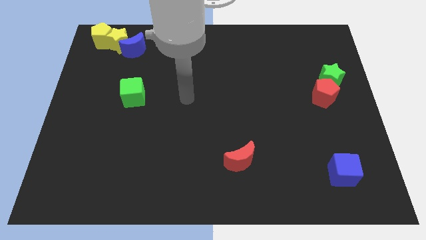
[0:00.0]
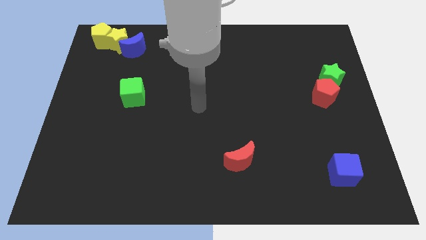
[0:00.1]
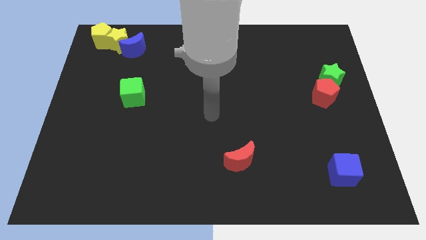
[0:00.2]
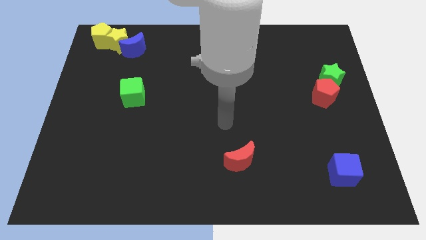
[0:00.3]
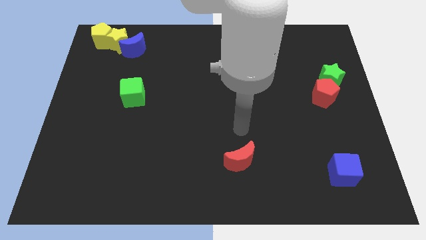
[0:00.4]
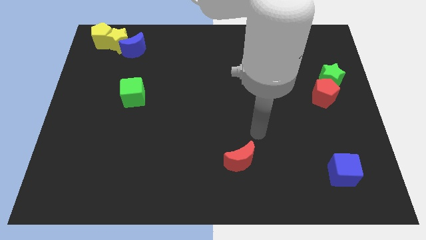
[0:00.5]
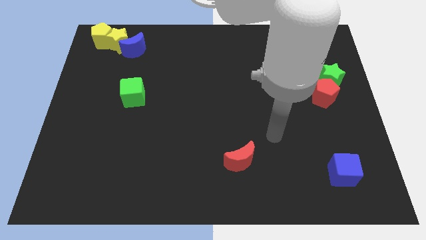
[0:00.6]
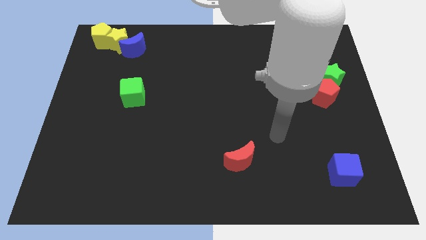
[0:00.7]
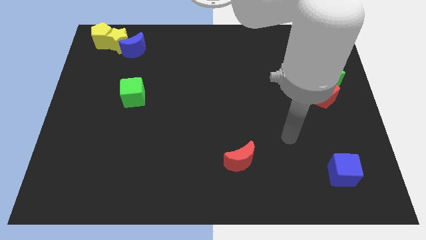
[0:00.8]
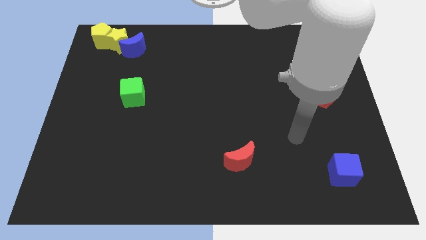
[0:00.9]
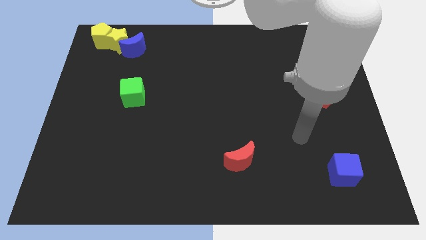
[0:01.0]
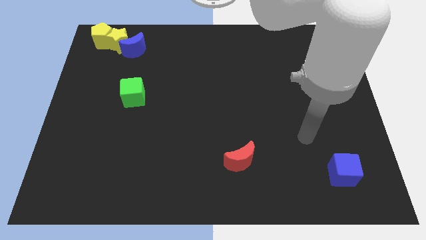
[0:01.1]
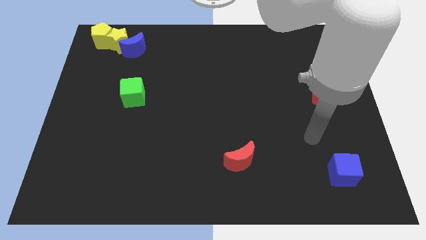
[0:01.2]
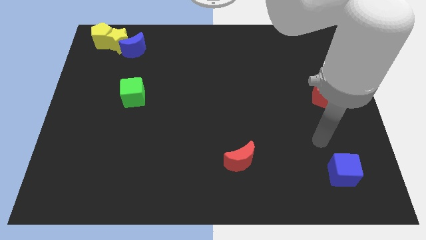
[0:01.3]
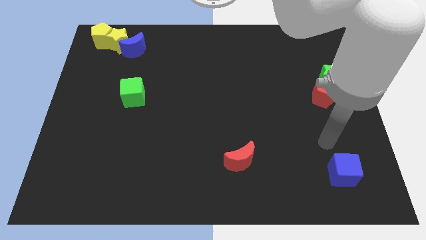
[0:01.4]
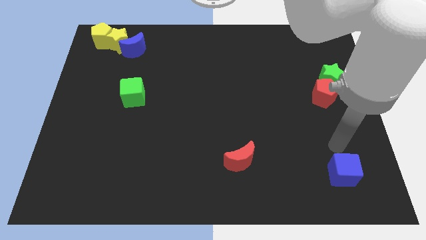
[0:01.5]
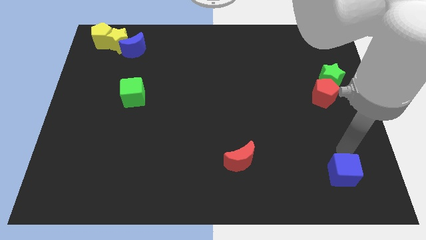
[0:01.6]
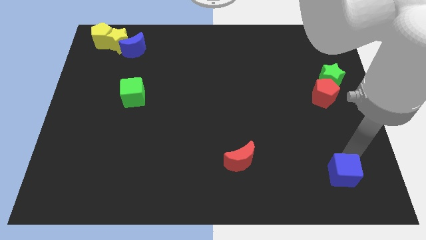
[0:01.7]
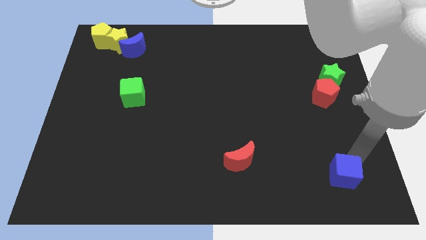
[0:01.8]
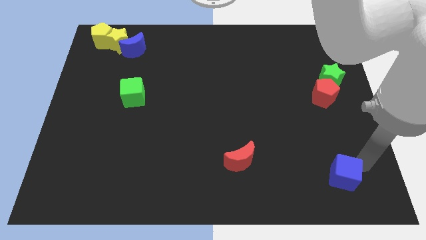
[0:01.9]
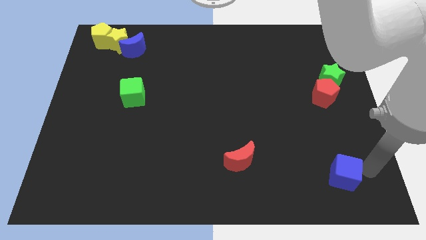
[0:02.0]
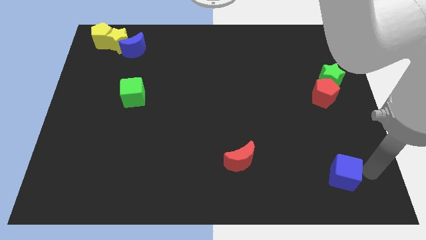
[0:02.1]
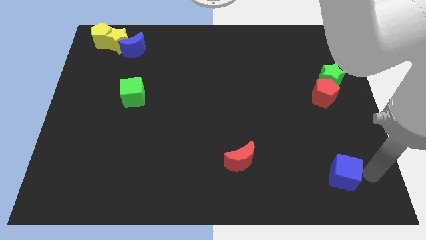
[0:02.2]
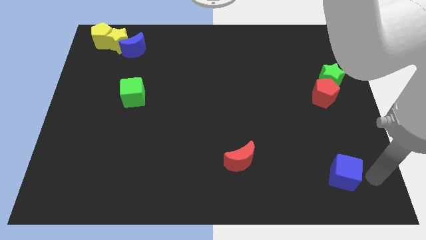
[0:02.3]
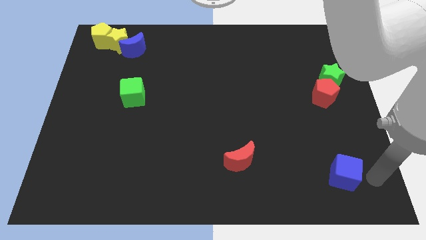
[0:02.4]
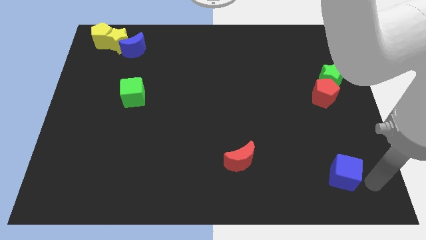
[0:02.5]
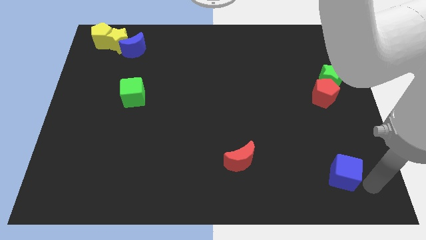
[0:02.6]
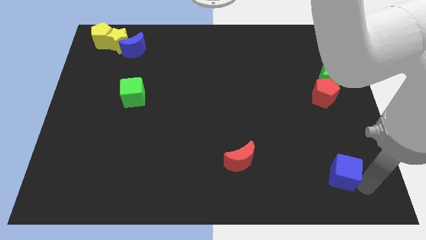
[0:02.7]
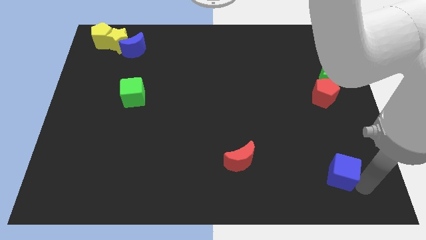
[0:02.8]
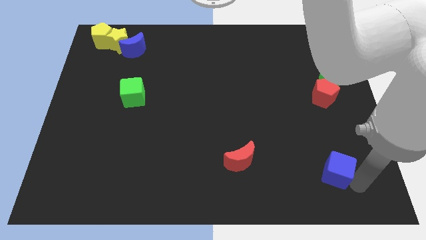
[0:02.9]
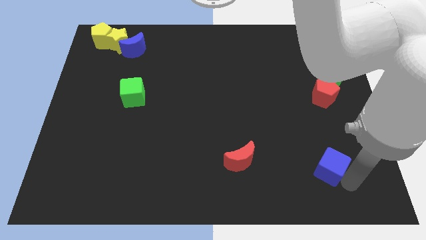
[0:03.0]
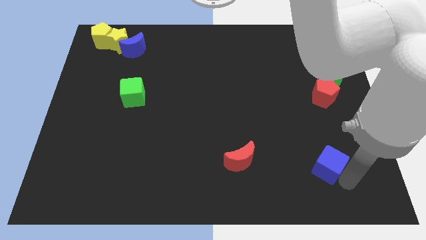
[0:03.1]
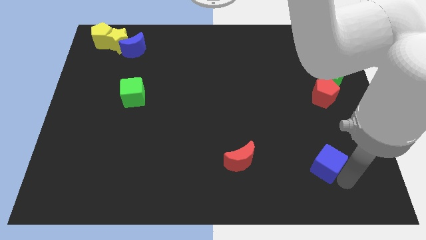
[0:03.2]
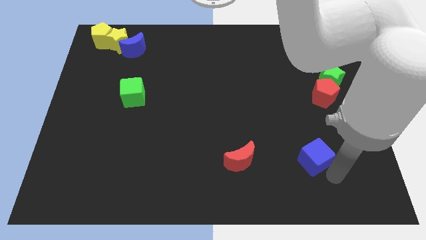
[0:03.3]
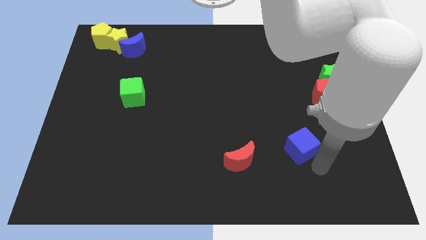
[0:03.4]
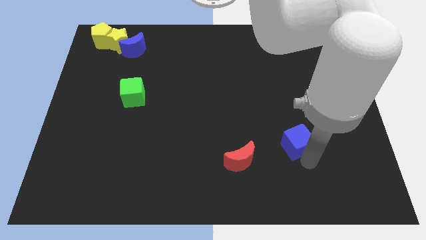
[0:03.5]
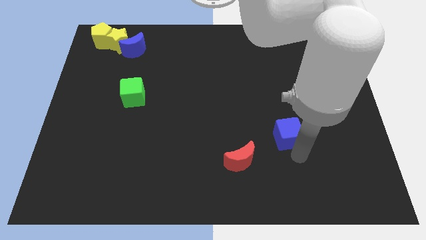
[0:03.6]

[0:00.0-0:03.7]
push blue cube beside red crescent

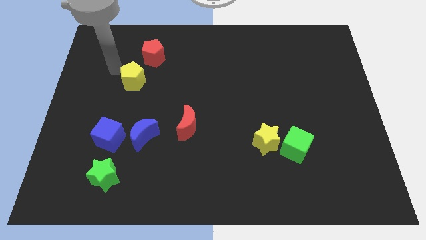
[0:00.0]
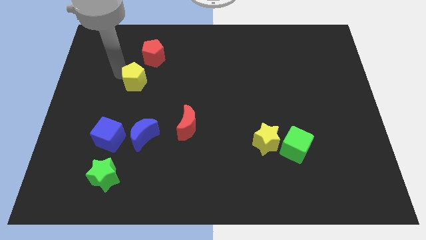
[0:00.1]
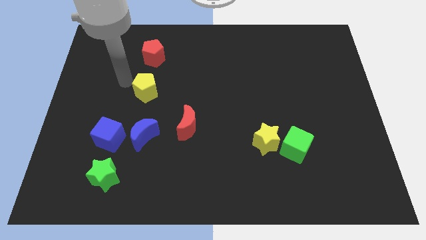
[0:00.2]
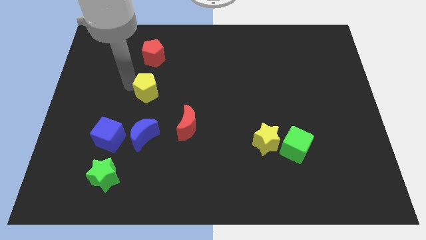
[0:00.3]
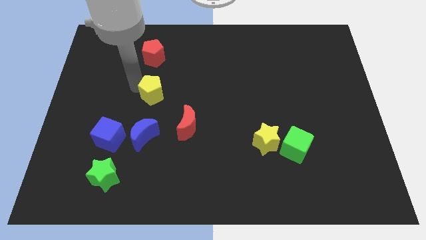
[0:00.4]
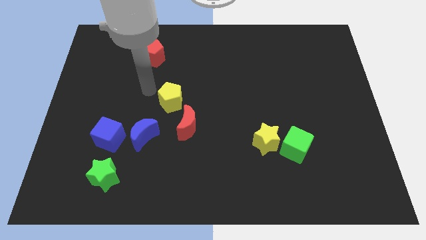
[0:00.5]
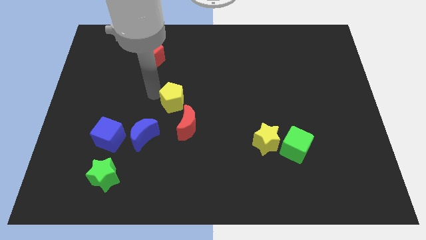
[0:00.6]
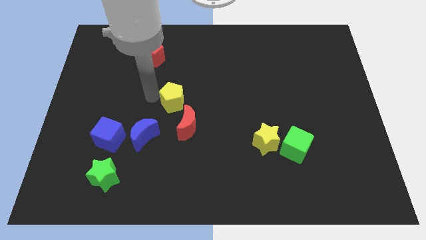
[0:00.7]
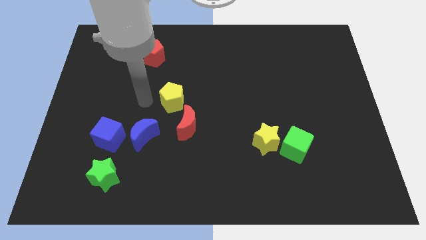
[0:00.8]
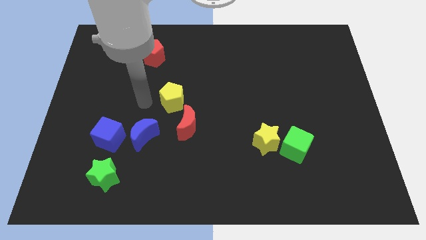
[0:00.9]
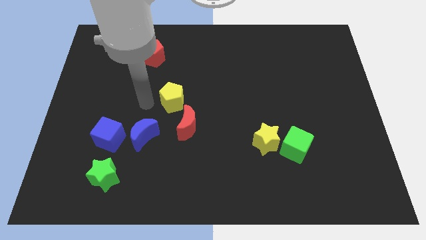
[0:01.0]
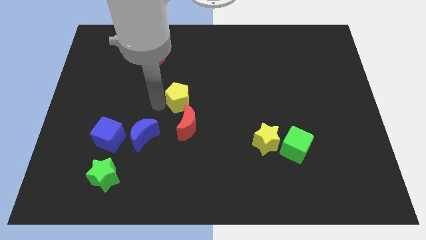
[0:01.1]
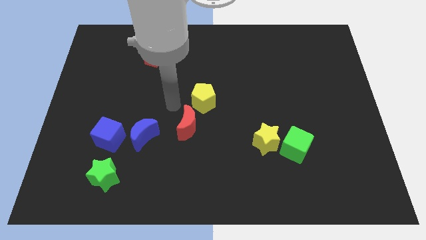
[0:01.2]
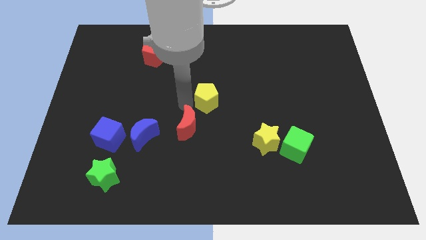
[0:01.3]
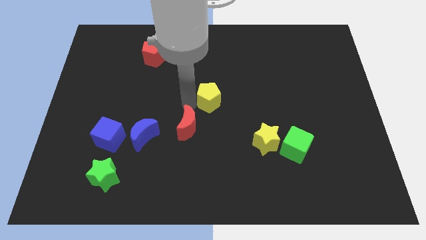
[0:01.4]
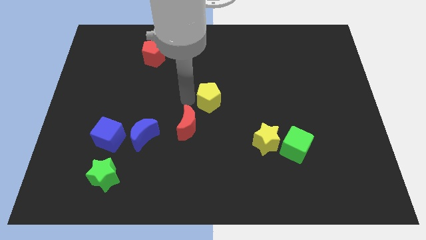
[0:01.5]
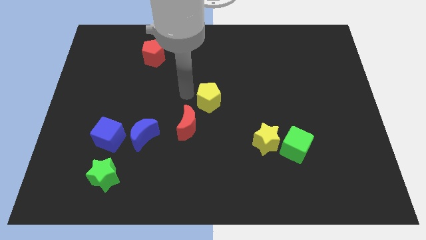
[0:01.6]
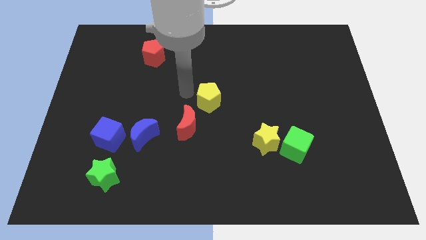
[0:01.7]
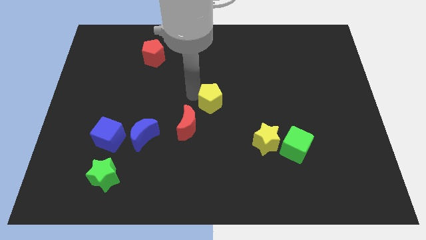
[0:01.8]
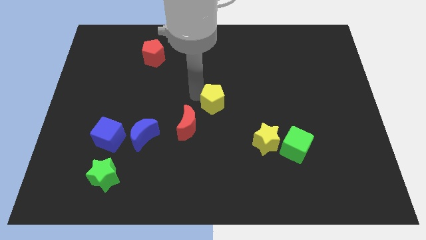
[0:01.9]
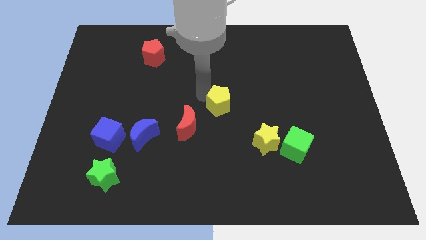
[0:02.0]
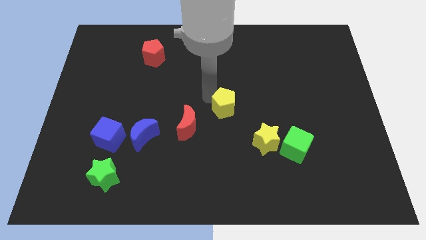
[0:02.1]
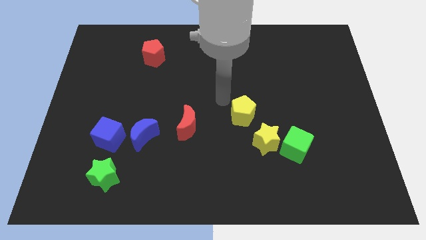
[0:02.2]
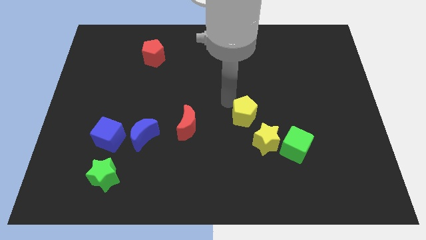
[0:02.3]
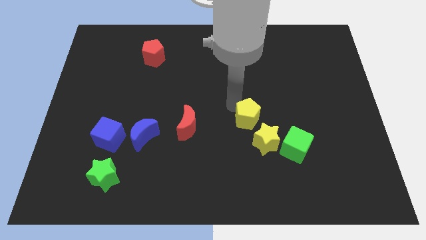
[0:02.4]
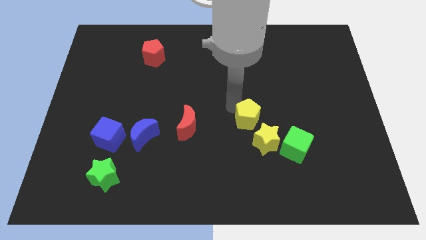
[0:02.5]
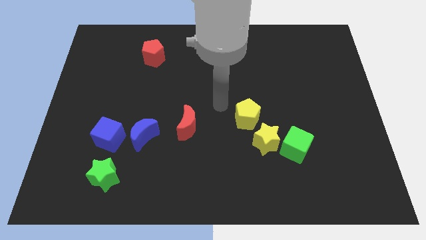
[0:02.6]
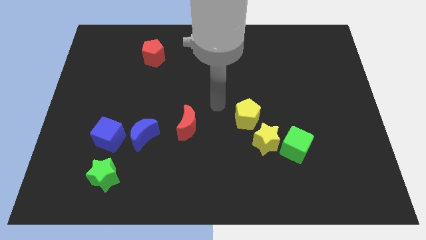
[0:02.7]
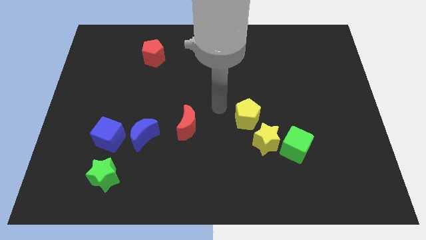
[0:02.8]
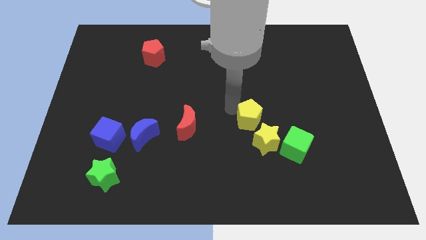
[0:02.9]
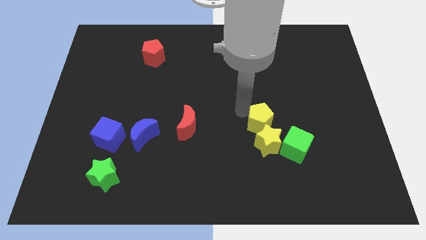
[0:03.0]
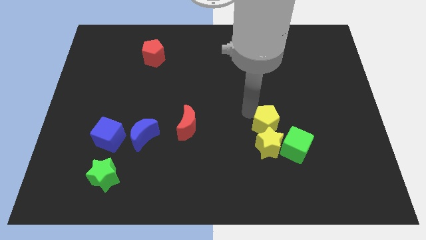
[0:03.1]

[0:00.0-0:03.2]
push the yellow pentagon into the group of blocks

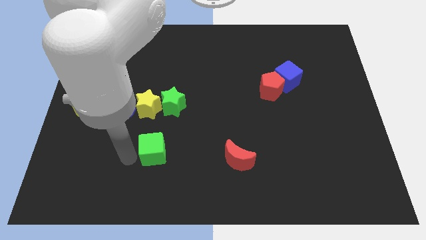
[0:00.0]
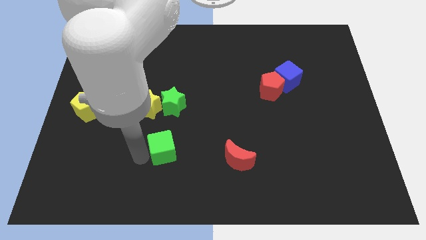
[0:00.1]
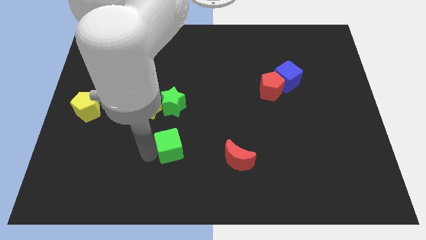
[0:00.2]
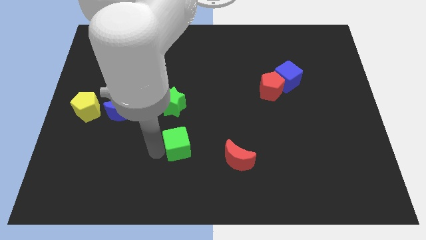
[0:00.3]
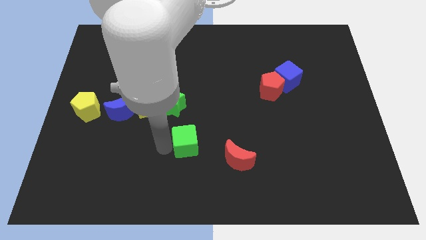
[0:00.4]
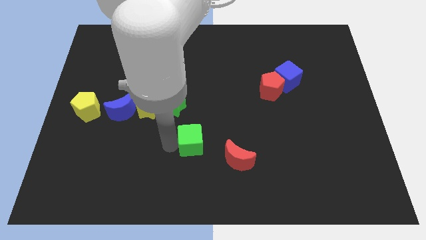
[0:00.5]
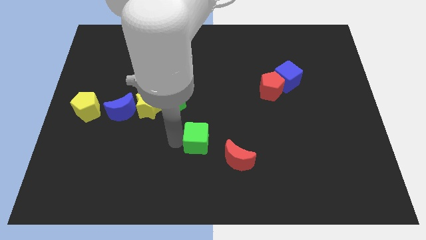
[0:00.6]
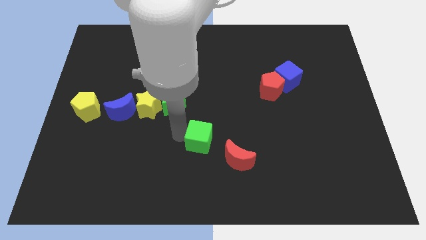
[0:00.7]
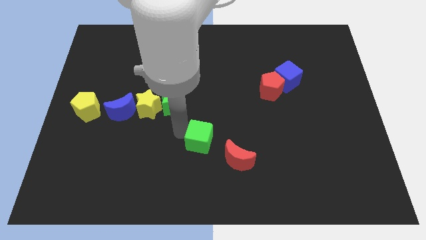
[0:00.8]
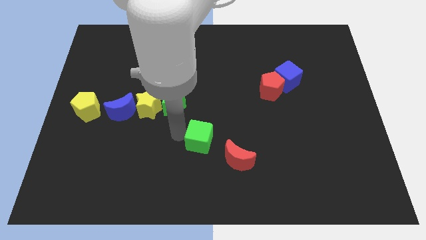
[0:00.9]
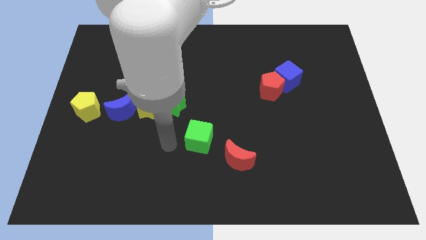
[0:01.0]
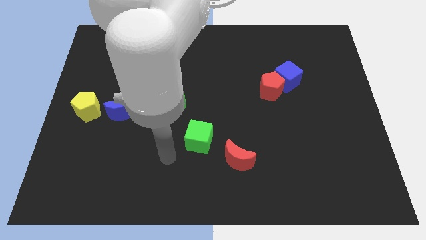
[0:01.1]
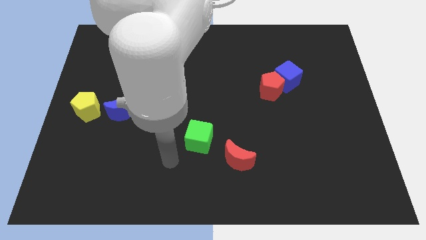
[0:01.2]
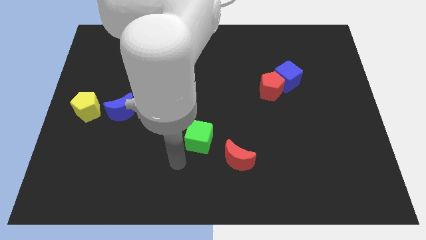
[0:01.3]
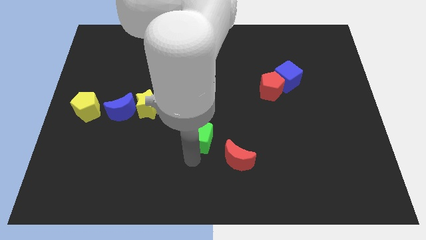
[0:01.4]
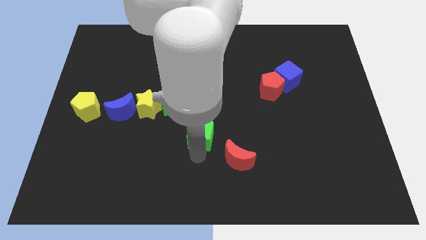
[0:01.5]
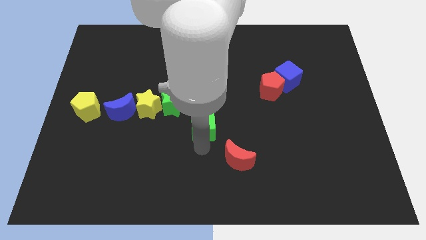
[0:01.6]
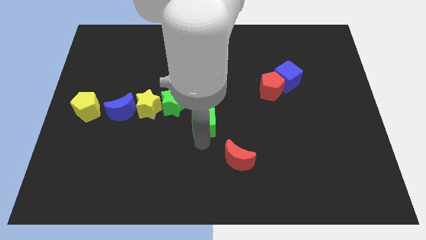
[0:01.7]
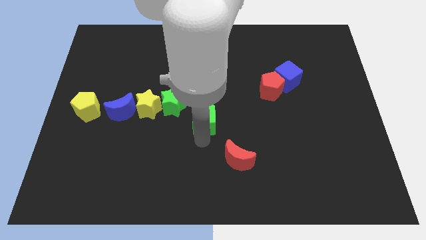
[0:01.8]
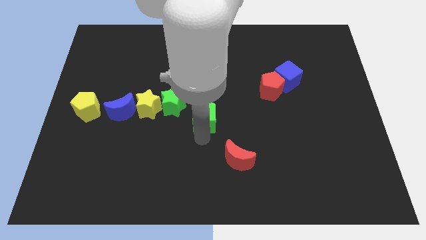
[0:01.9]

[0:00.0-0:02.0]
slide the green cube diagonally bottom right to the green star

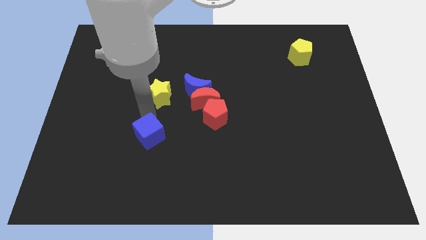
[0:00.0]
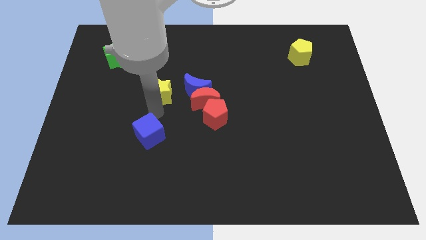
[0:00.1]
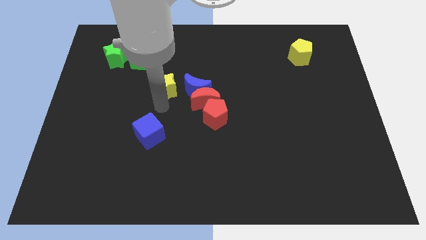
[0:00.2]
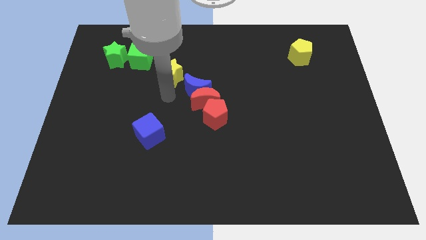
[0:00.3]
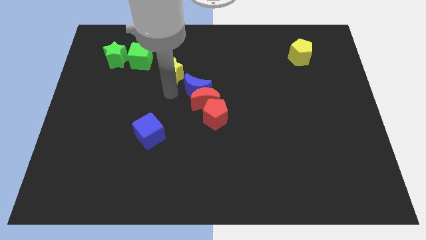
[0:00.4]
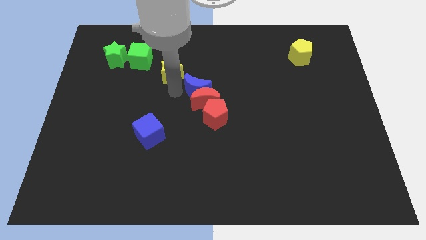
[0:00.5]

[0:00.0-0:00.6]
put the yellow star in between the green cube and blue moon
